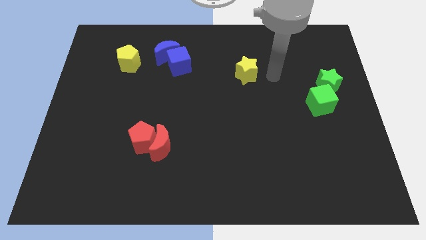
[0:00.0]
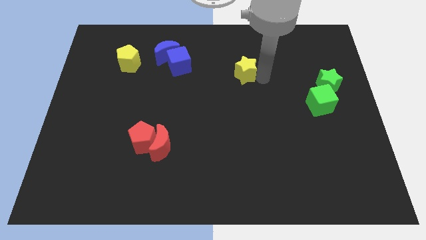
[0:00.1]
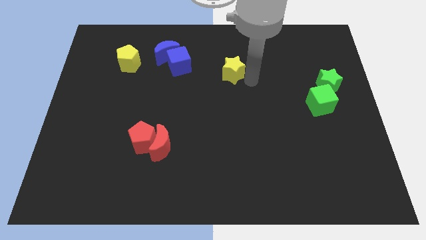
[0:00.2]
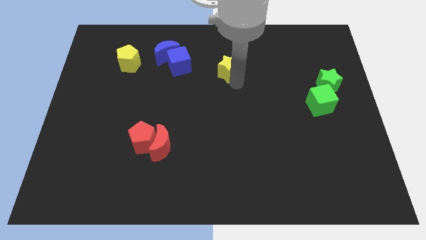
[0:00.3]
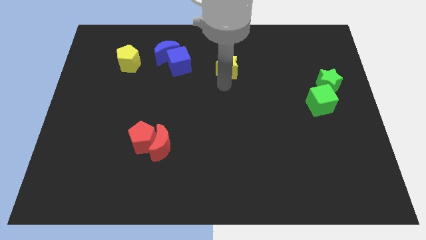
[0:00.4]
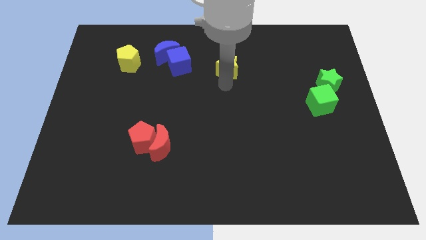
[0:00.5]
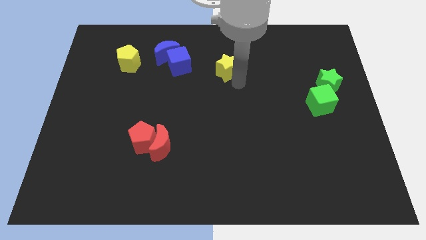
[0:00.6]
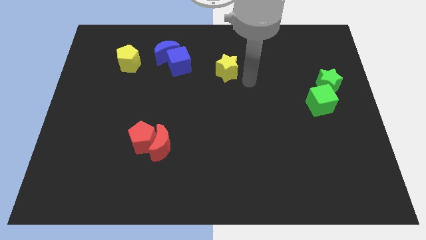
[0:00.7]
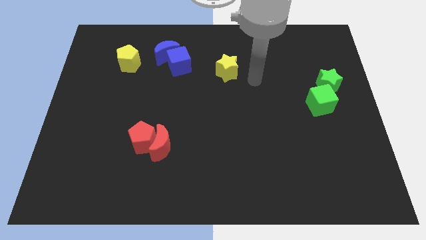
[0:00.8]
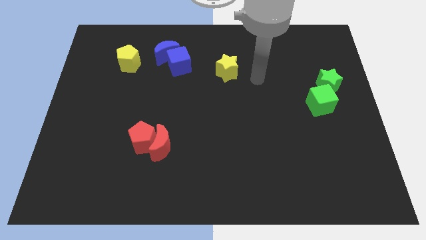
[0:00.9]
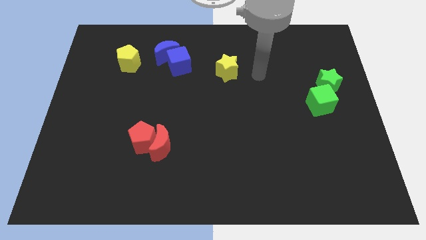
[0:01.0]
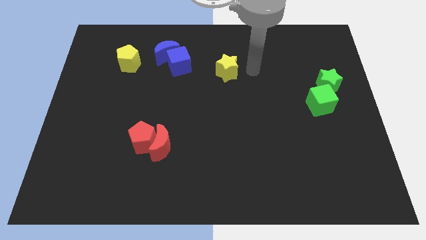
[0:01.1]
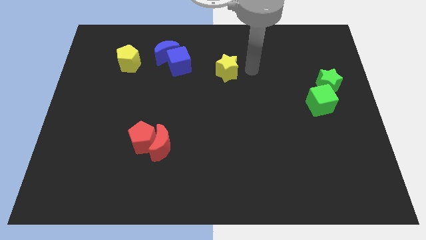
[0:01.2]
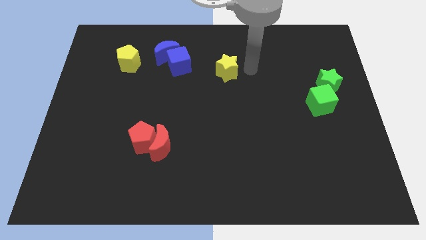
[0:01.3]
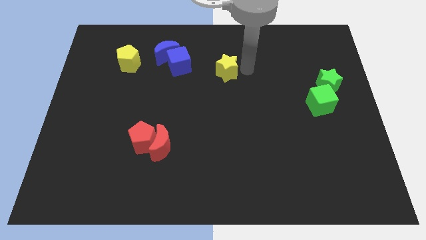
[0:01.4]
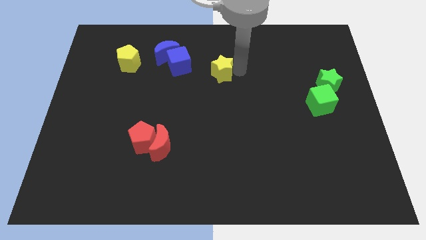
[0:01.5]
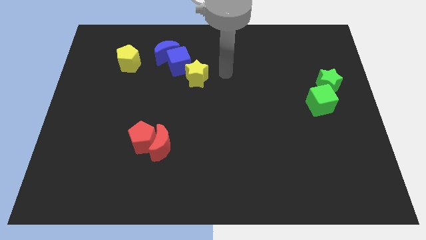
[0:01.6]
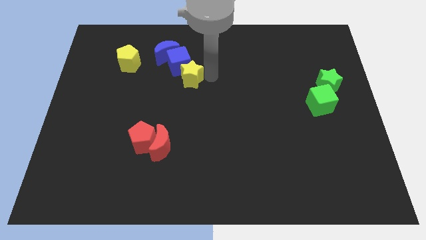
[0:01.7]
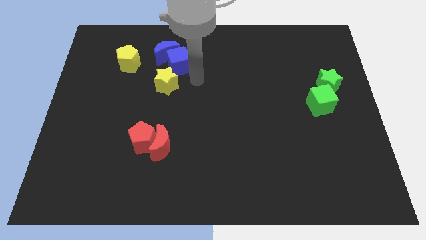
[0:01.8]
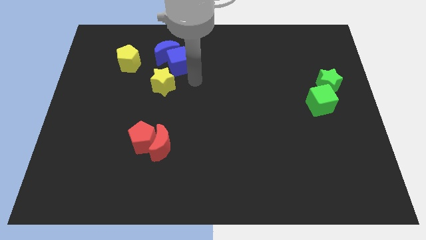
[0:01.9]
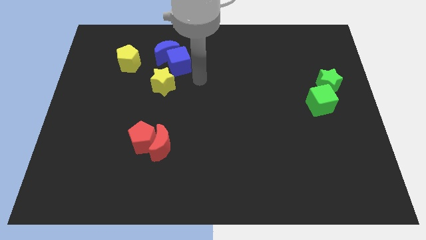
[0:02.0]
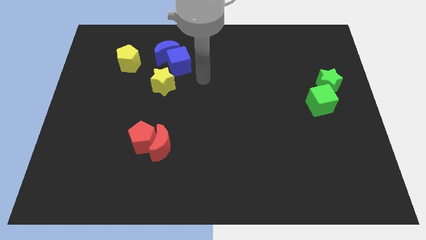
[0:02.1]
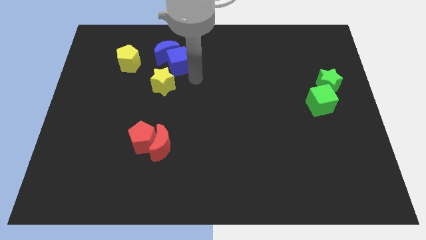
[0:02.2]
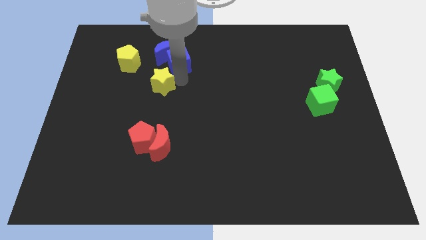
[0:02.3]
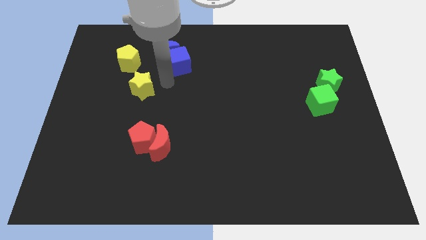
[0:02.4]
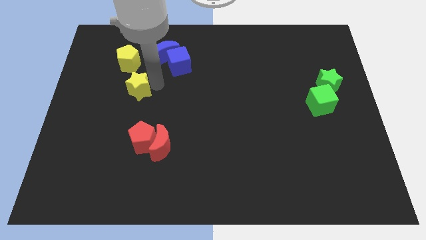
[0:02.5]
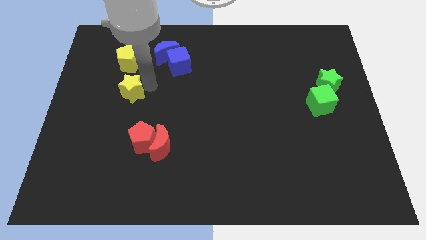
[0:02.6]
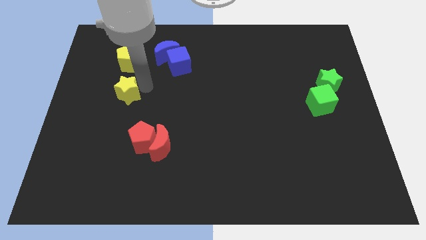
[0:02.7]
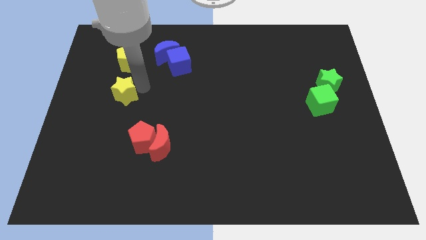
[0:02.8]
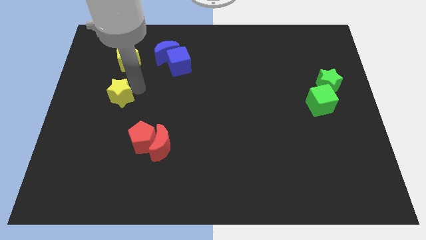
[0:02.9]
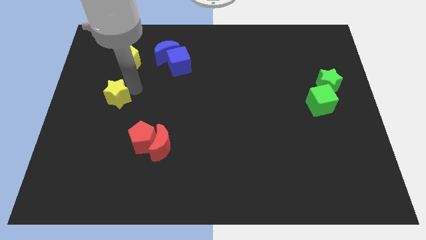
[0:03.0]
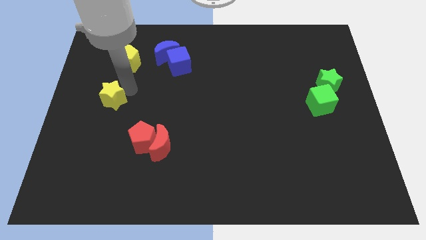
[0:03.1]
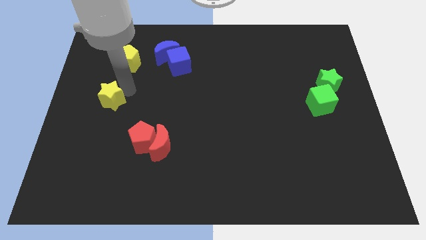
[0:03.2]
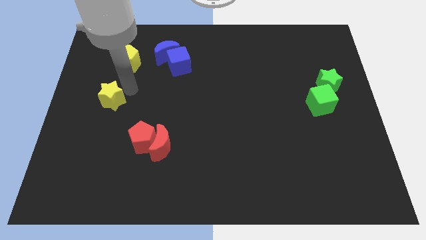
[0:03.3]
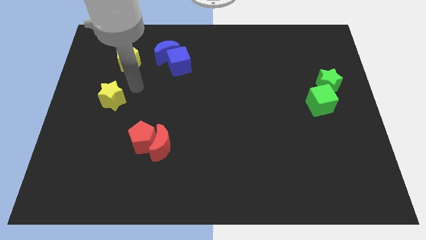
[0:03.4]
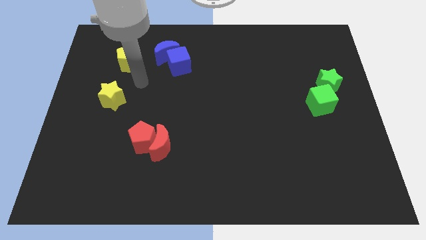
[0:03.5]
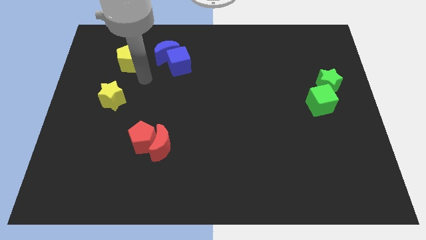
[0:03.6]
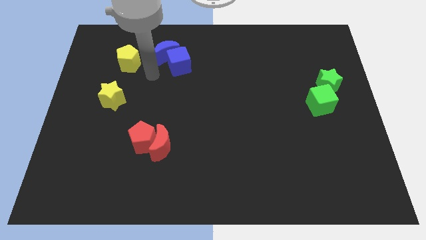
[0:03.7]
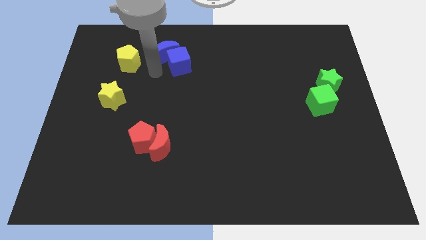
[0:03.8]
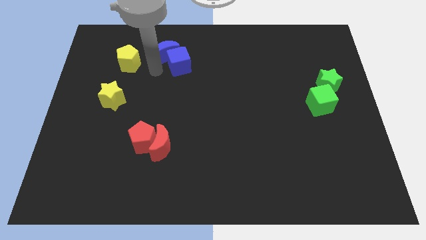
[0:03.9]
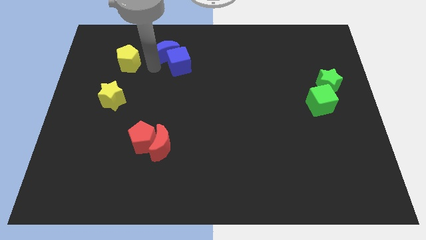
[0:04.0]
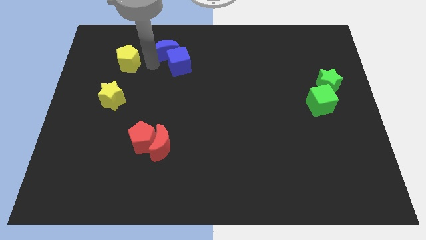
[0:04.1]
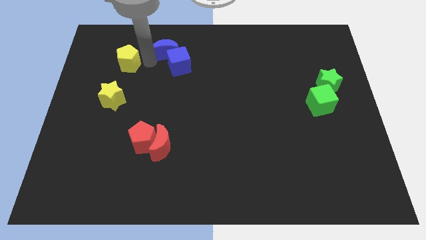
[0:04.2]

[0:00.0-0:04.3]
move the yellow star to the center left

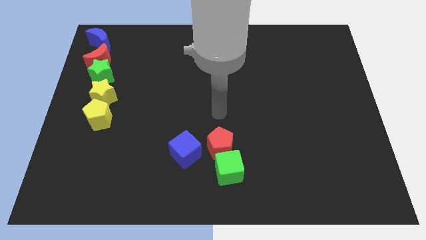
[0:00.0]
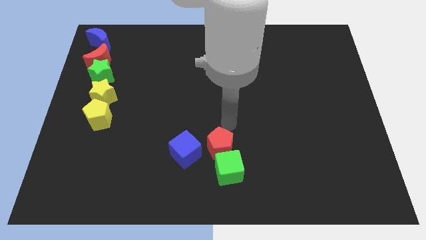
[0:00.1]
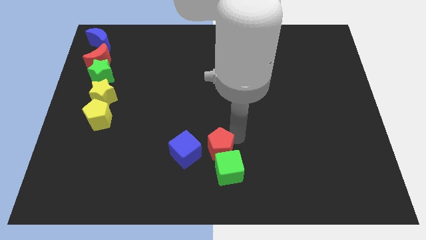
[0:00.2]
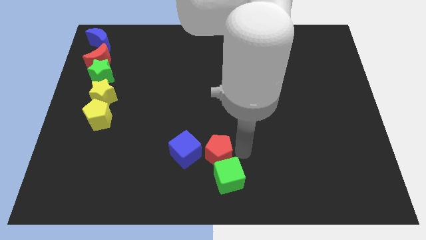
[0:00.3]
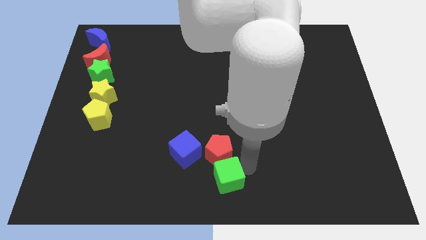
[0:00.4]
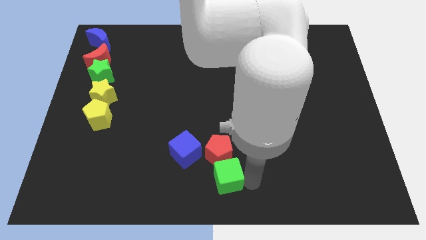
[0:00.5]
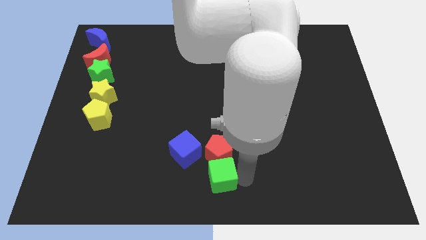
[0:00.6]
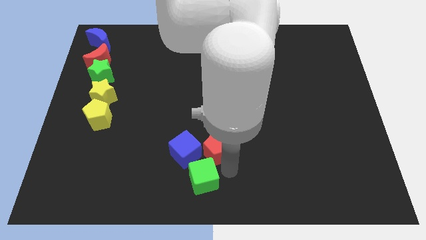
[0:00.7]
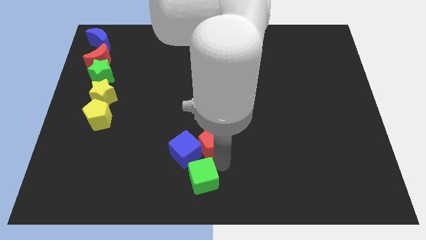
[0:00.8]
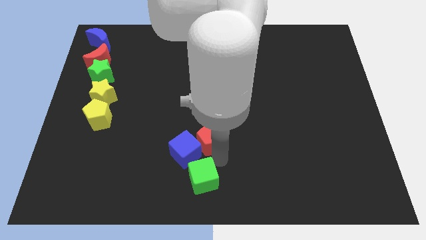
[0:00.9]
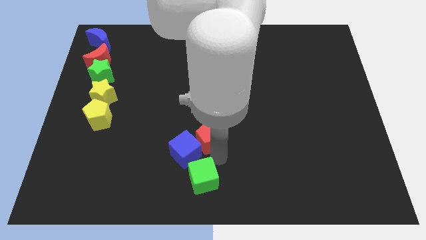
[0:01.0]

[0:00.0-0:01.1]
separate the red pentagon and green cube

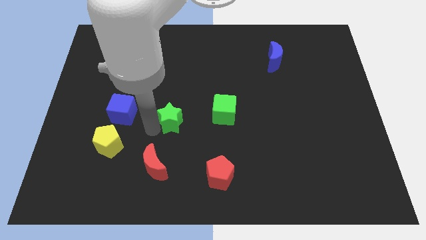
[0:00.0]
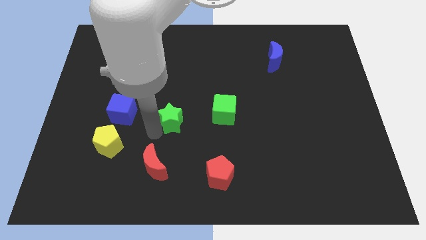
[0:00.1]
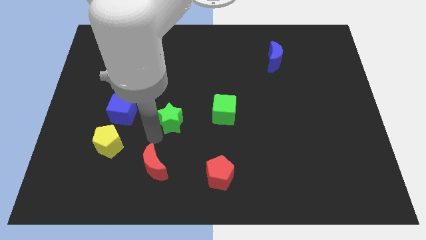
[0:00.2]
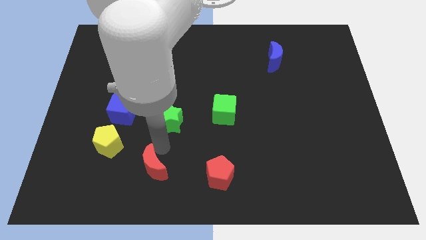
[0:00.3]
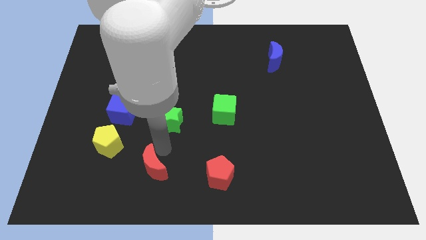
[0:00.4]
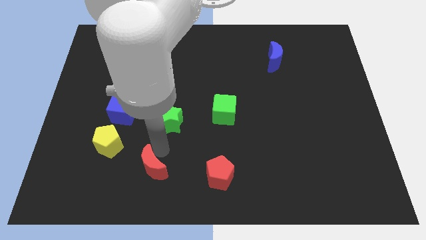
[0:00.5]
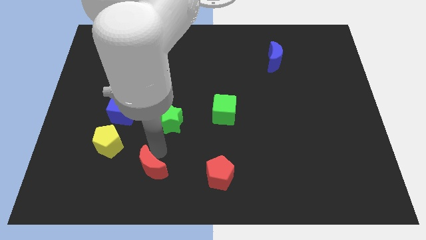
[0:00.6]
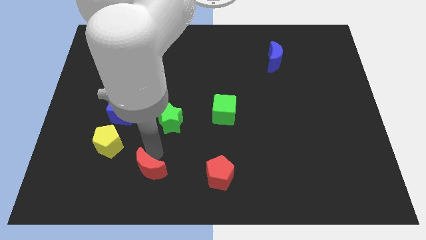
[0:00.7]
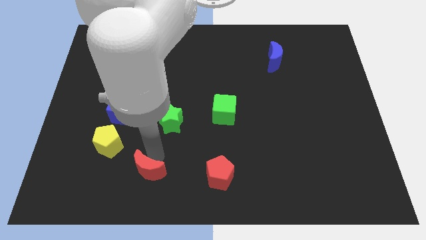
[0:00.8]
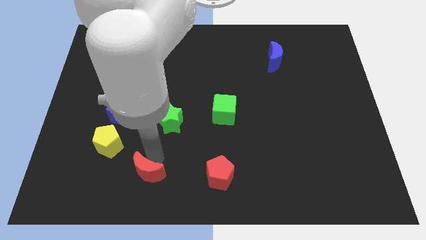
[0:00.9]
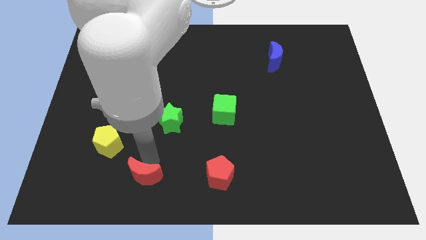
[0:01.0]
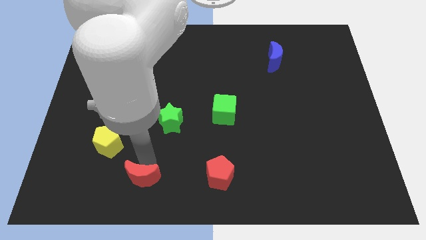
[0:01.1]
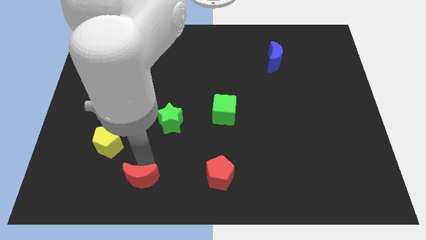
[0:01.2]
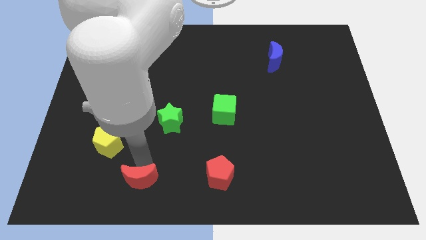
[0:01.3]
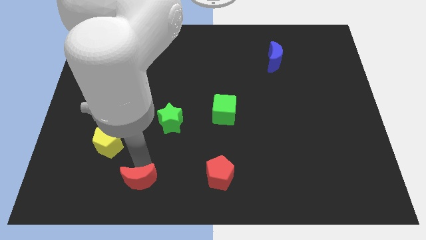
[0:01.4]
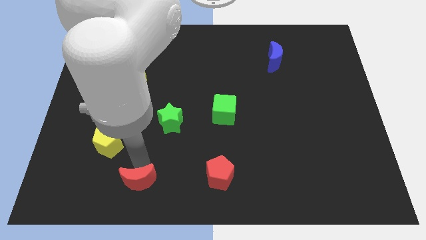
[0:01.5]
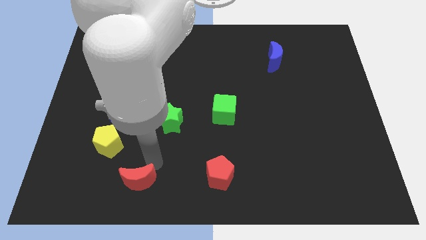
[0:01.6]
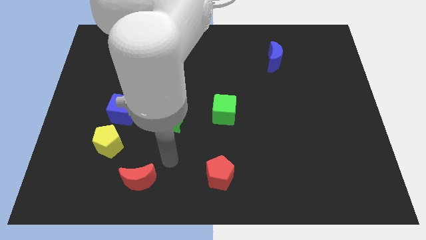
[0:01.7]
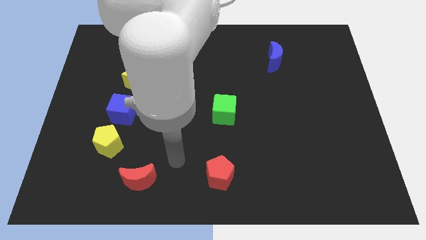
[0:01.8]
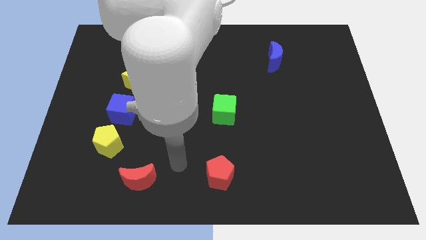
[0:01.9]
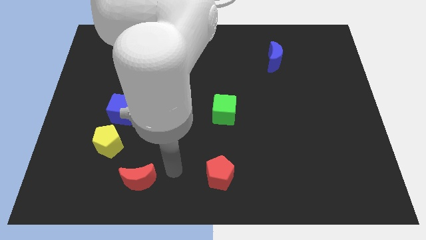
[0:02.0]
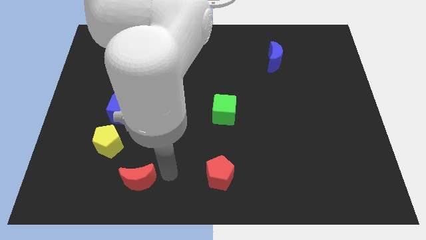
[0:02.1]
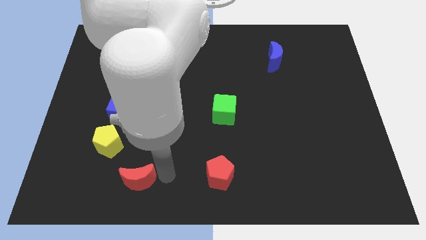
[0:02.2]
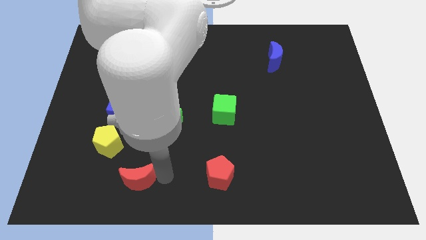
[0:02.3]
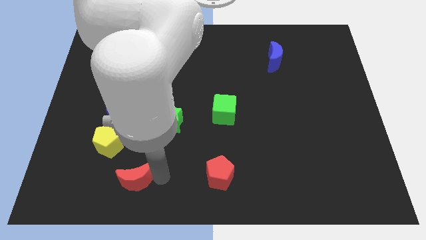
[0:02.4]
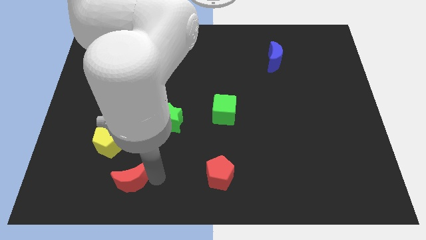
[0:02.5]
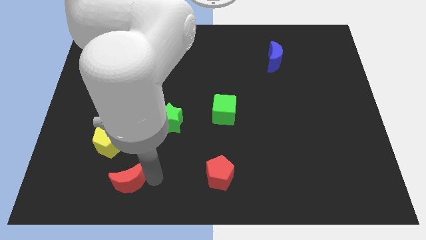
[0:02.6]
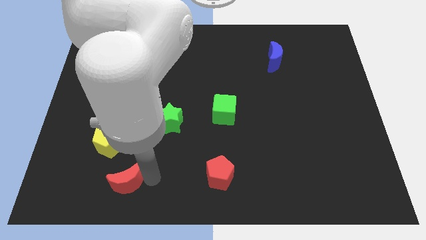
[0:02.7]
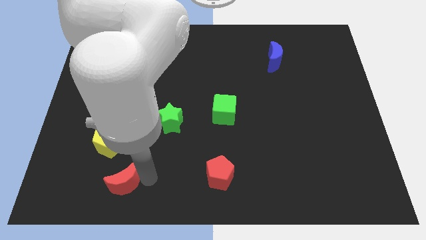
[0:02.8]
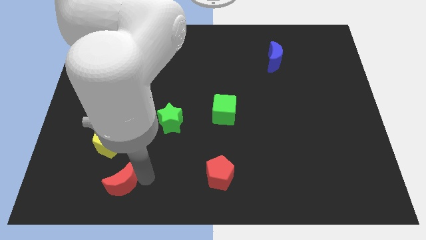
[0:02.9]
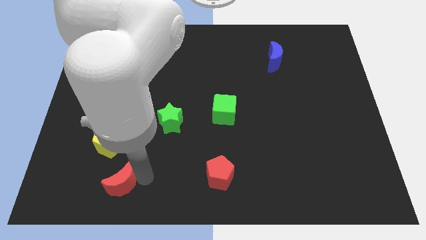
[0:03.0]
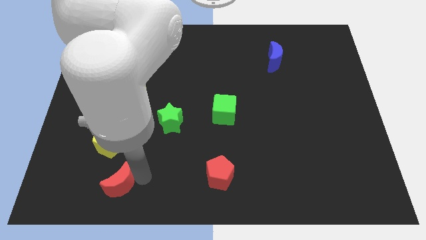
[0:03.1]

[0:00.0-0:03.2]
place red crescent below yellow pentagon

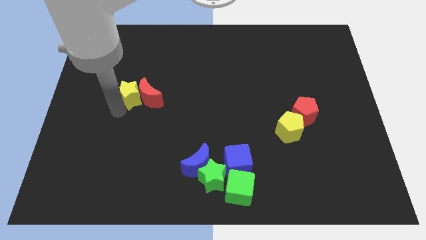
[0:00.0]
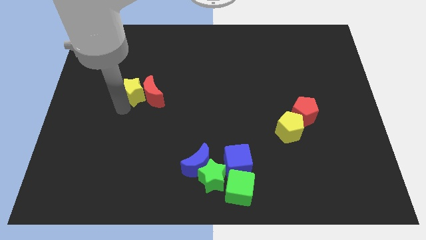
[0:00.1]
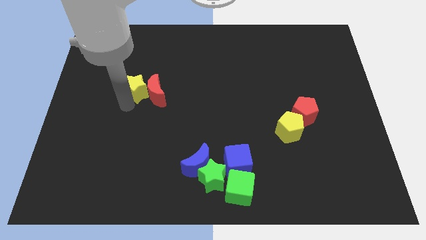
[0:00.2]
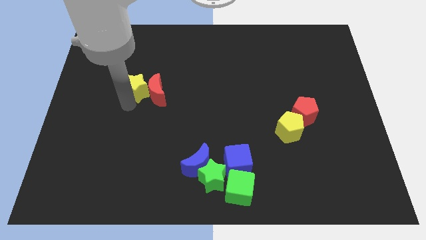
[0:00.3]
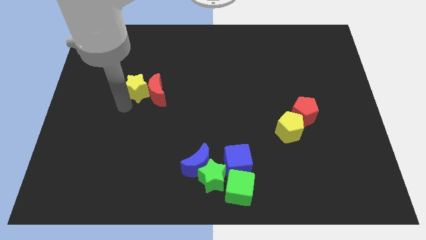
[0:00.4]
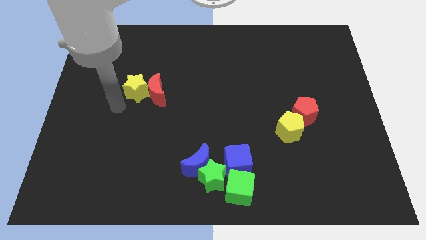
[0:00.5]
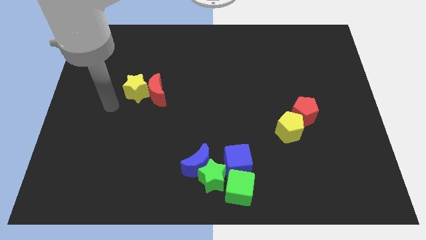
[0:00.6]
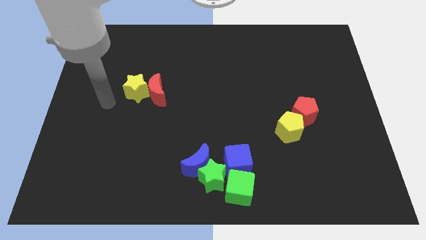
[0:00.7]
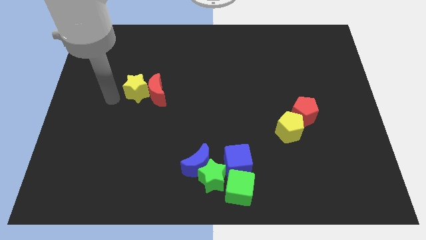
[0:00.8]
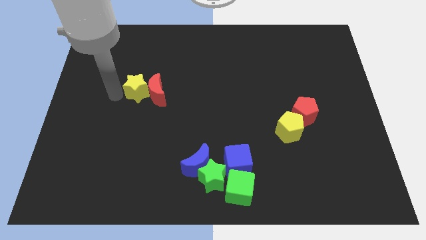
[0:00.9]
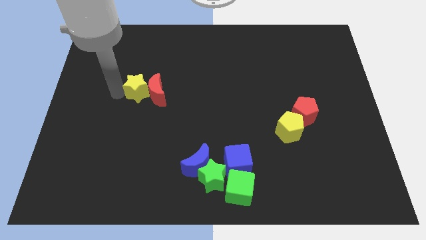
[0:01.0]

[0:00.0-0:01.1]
push the yellow star to the left of the red crescent
